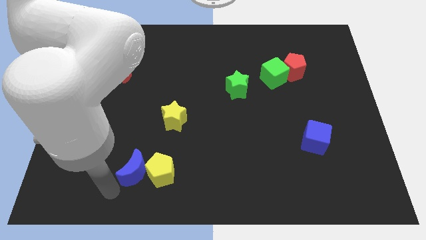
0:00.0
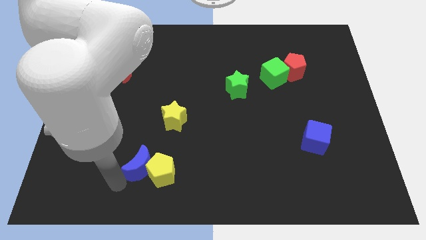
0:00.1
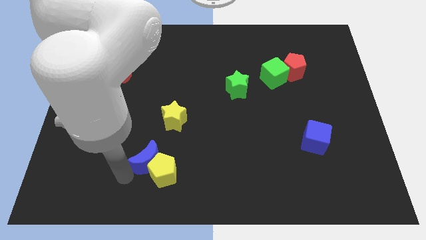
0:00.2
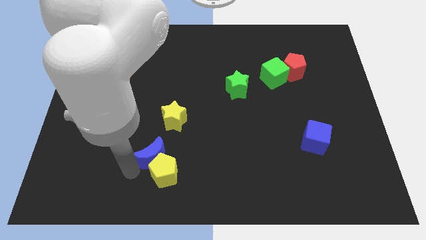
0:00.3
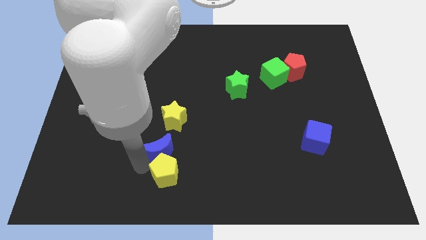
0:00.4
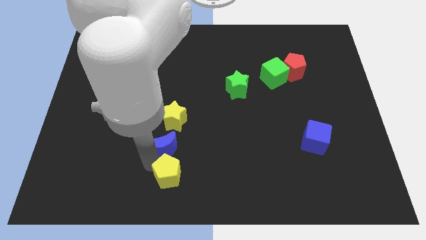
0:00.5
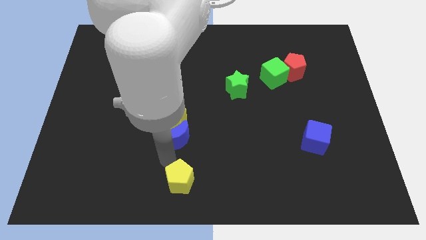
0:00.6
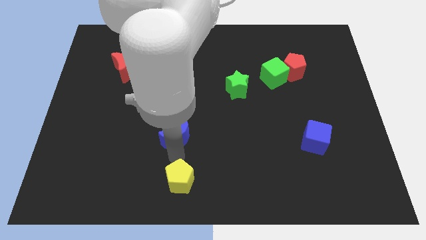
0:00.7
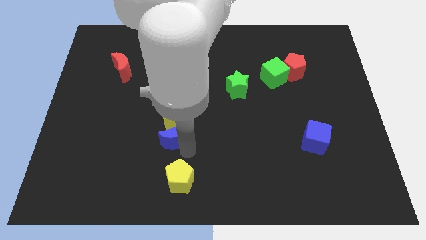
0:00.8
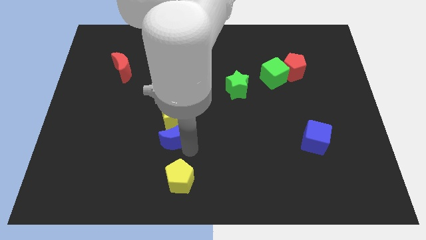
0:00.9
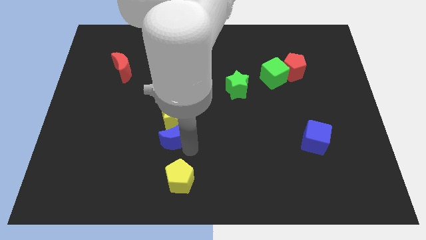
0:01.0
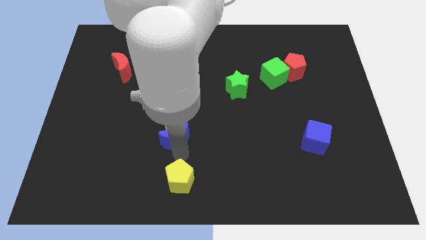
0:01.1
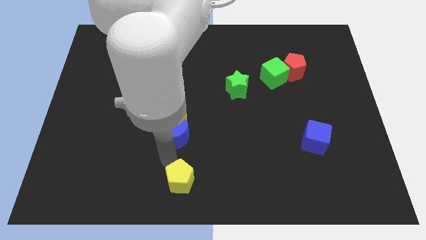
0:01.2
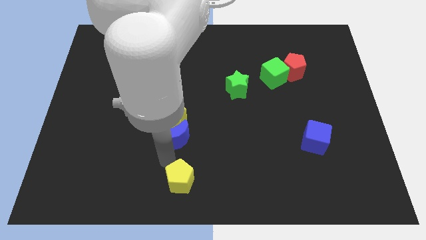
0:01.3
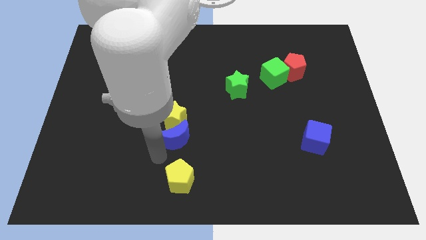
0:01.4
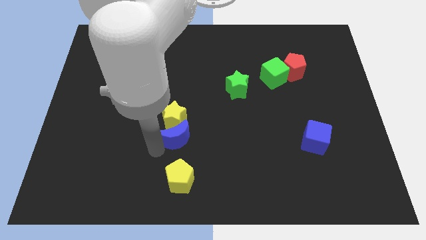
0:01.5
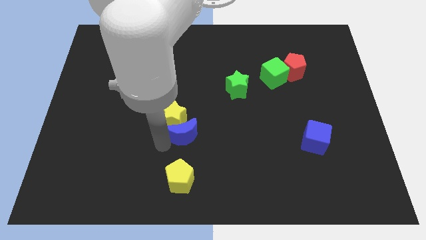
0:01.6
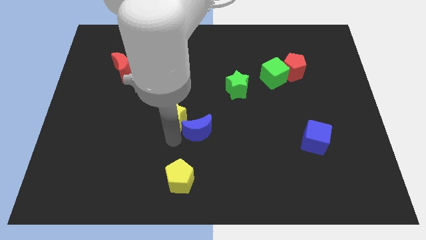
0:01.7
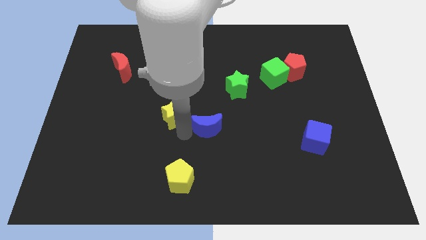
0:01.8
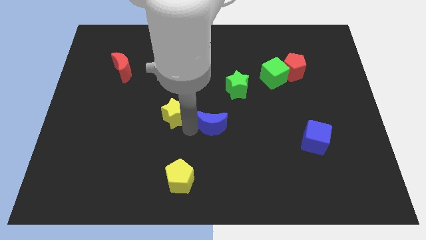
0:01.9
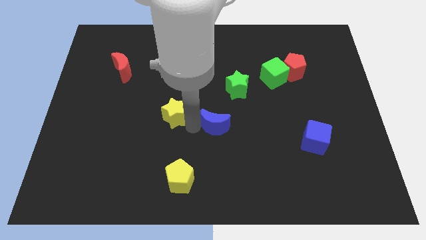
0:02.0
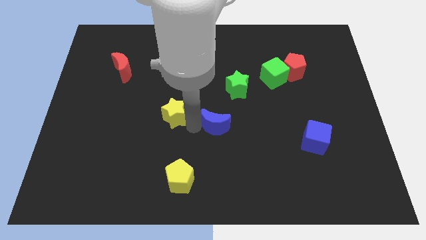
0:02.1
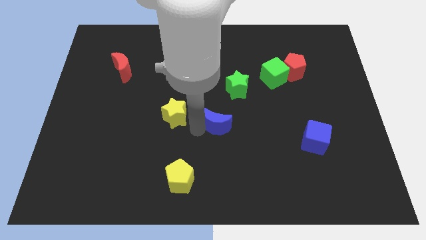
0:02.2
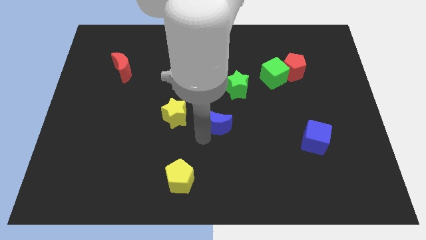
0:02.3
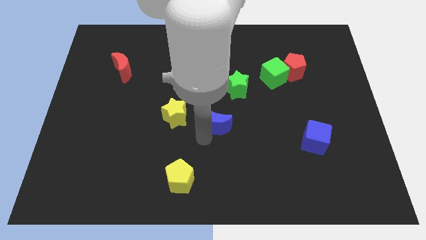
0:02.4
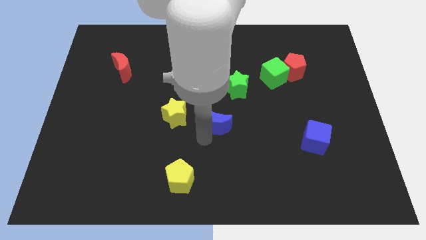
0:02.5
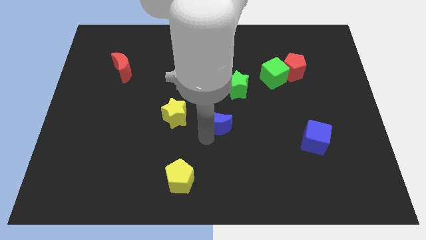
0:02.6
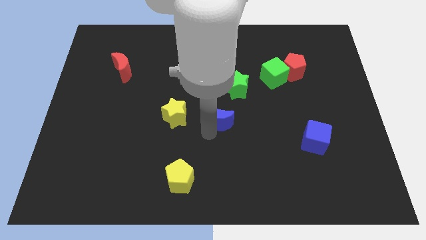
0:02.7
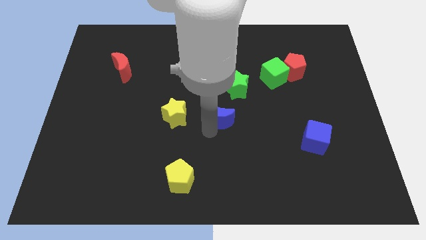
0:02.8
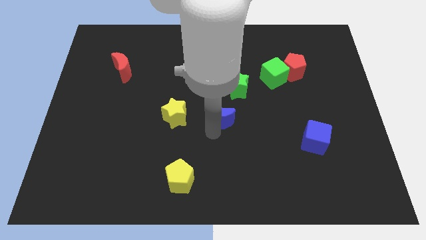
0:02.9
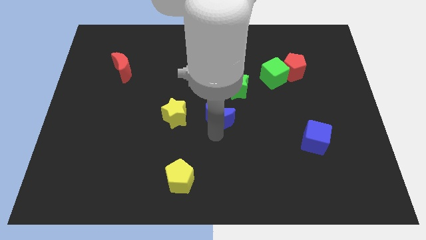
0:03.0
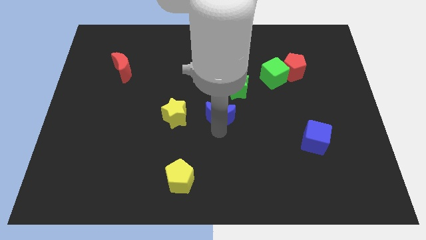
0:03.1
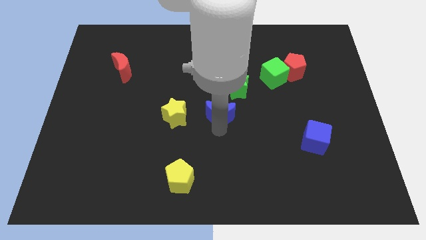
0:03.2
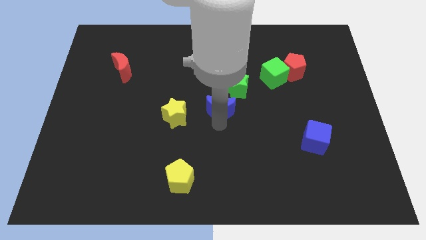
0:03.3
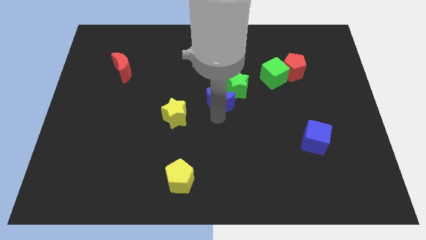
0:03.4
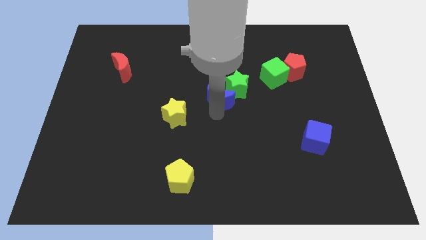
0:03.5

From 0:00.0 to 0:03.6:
move blue crescent at center

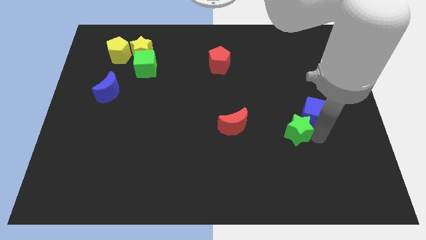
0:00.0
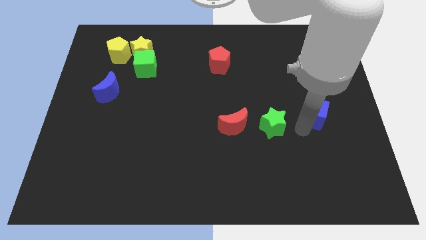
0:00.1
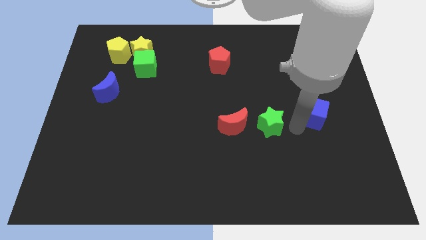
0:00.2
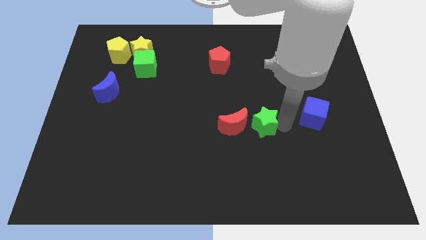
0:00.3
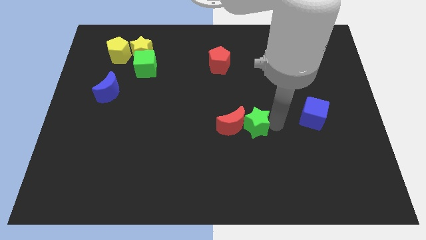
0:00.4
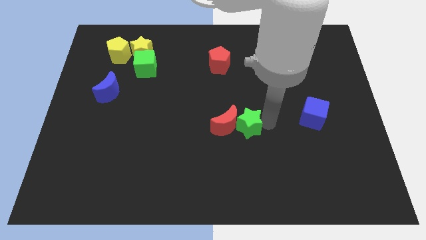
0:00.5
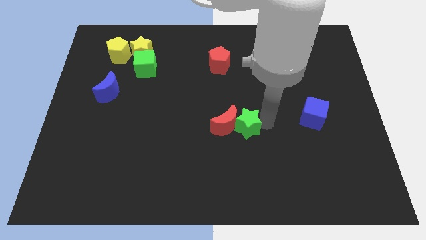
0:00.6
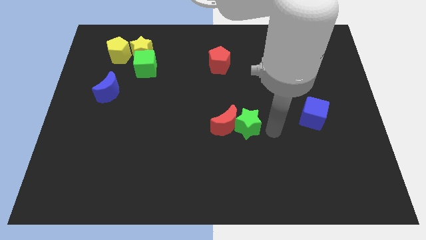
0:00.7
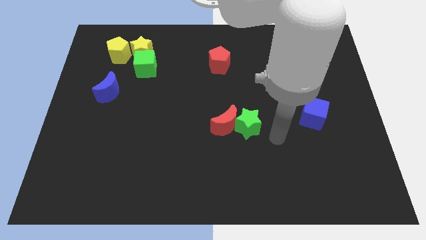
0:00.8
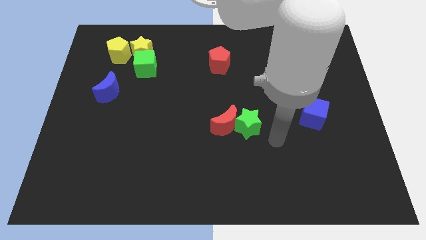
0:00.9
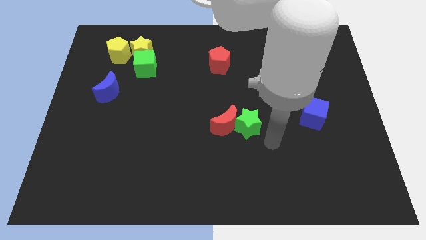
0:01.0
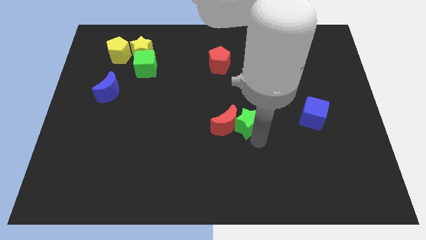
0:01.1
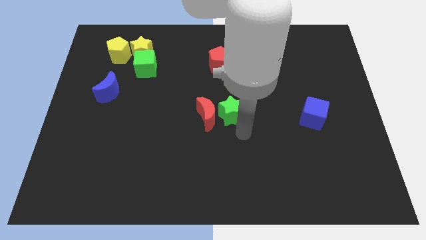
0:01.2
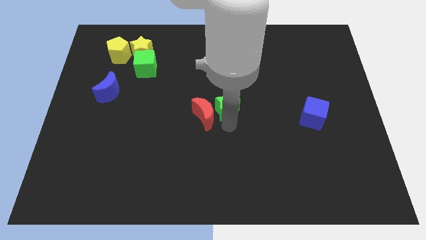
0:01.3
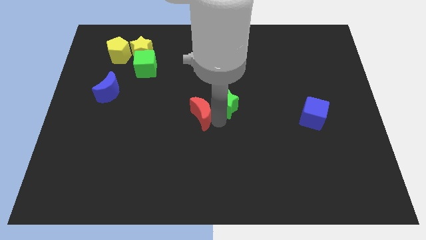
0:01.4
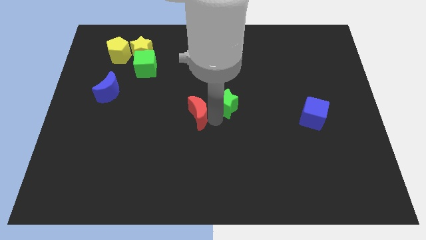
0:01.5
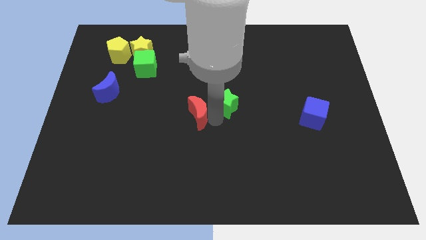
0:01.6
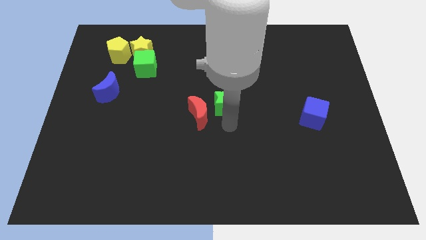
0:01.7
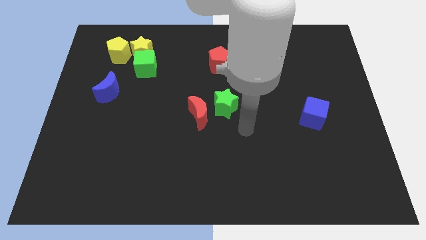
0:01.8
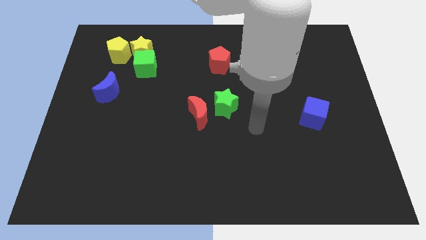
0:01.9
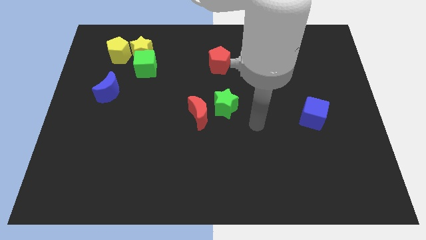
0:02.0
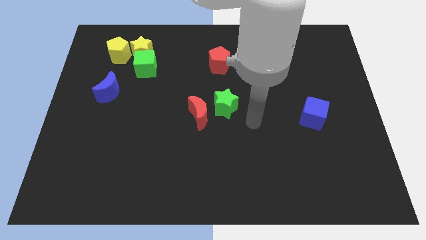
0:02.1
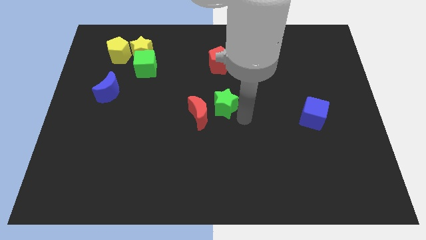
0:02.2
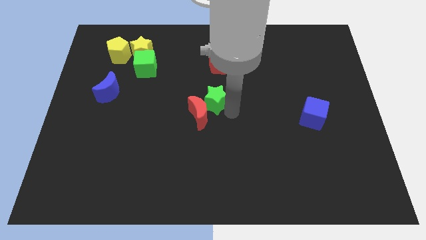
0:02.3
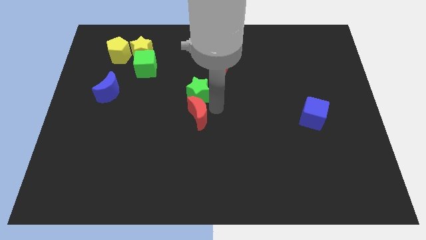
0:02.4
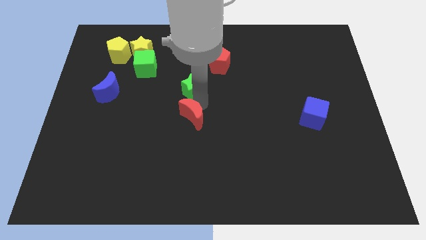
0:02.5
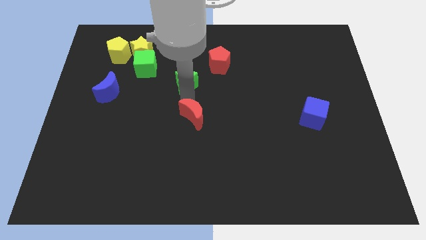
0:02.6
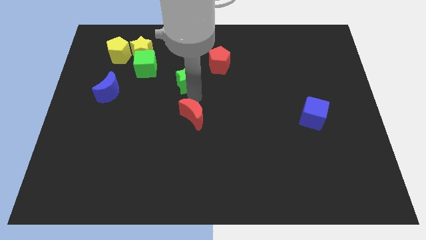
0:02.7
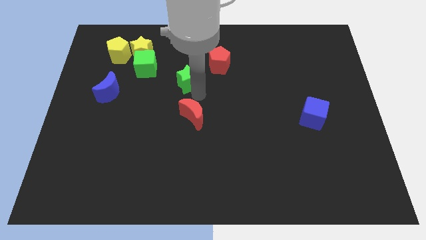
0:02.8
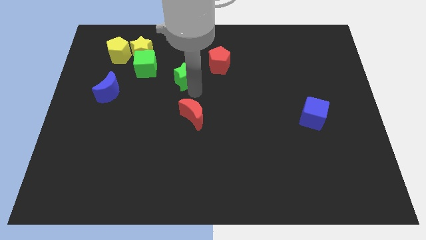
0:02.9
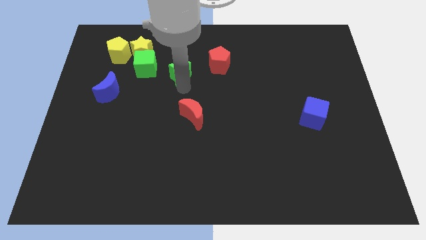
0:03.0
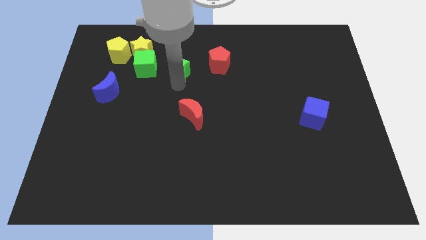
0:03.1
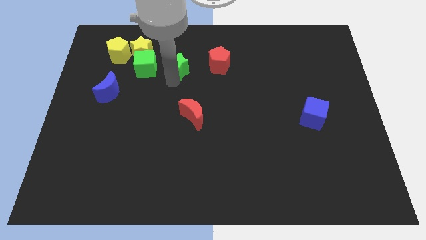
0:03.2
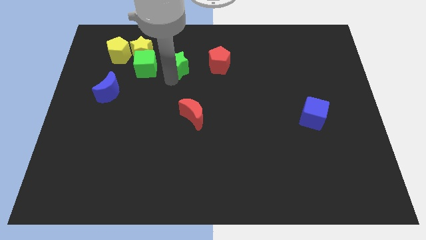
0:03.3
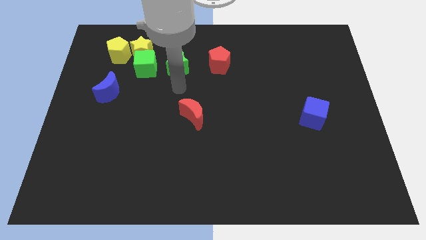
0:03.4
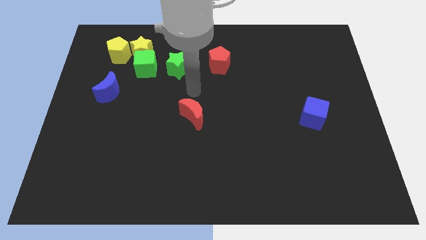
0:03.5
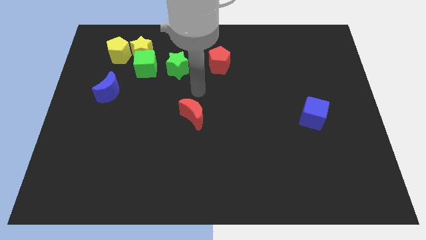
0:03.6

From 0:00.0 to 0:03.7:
move the green star to the left side of the red pentagon

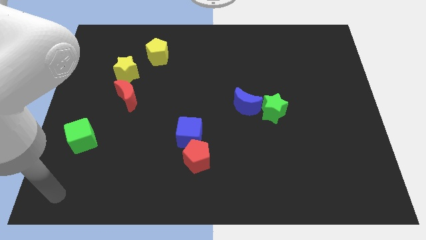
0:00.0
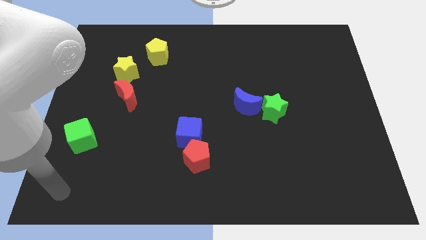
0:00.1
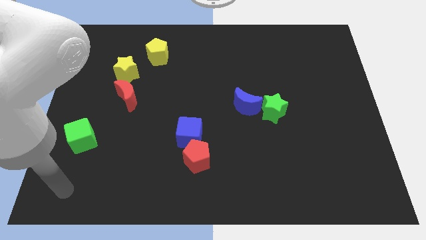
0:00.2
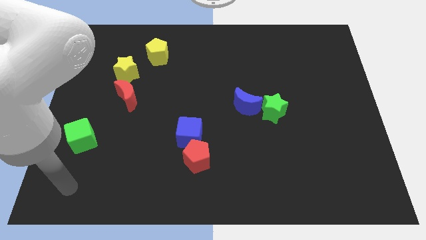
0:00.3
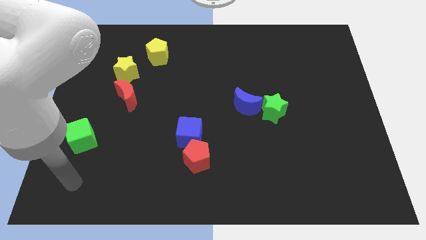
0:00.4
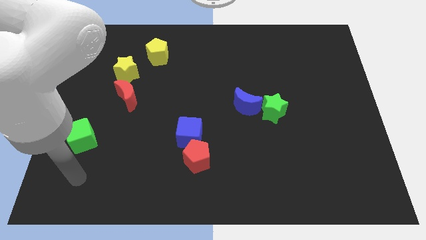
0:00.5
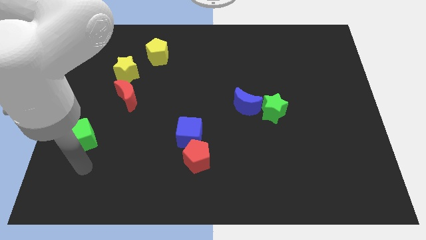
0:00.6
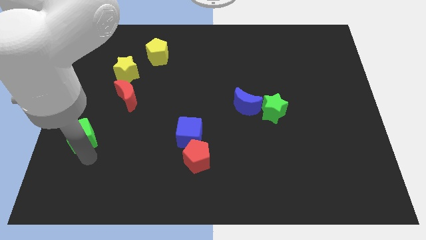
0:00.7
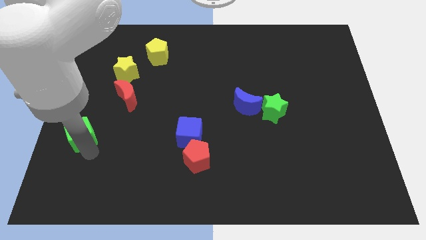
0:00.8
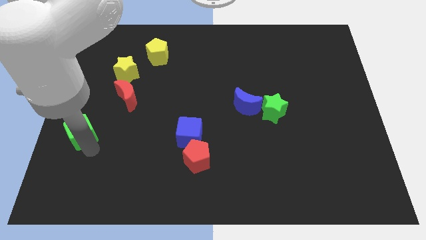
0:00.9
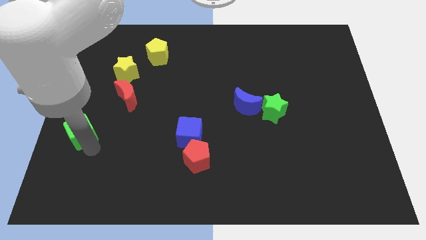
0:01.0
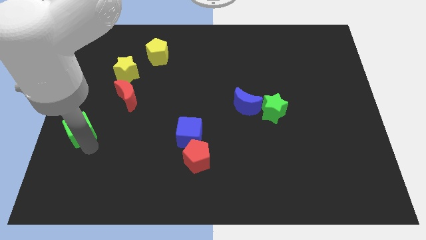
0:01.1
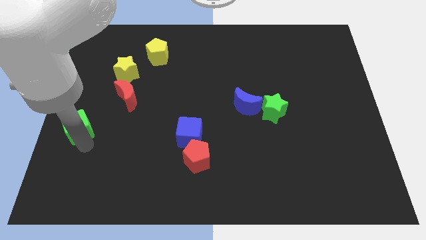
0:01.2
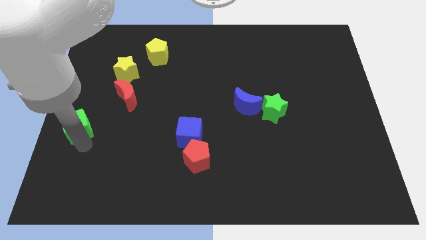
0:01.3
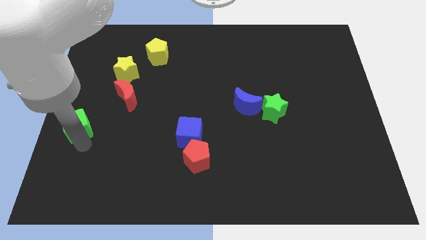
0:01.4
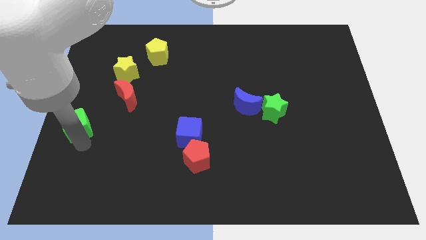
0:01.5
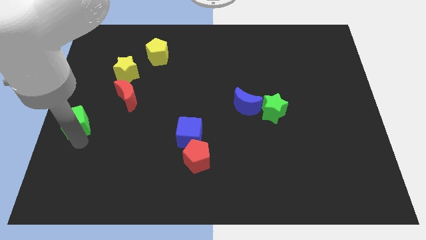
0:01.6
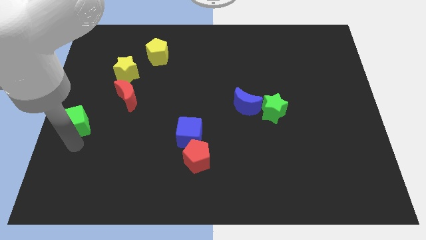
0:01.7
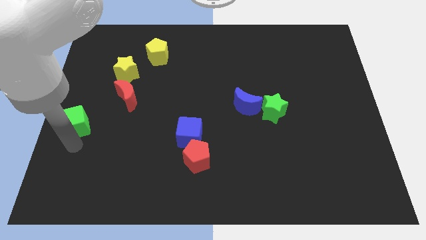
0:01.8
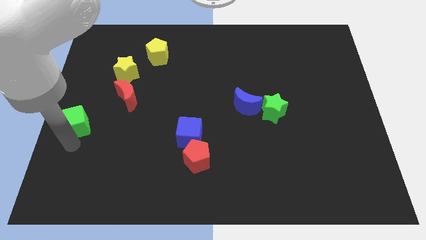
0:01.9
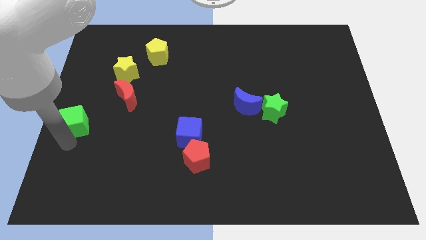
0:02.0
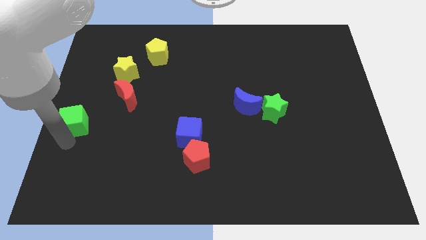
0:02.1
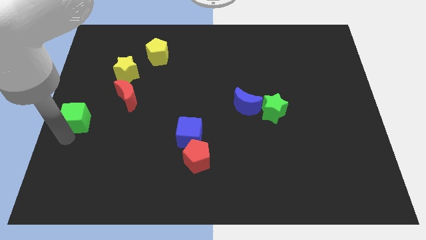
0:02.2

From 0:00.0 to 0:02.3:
push the green cube slightly up
